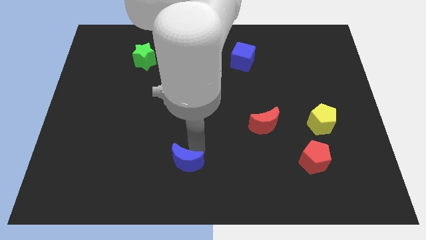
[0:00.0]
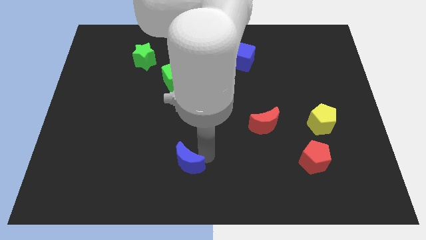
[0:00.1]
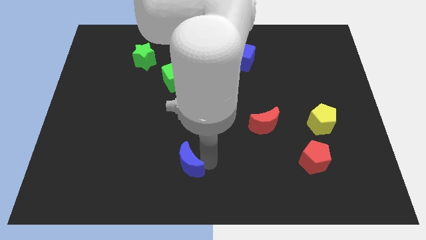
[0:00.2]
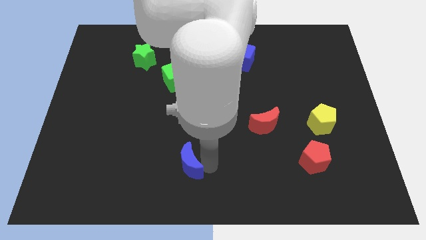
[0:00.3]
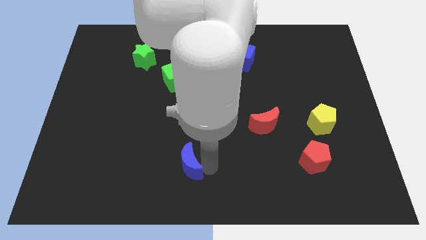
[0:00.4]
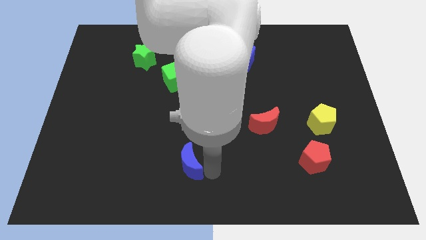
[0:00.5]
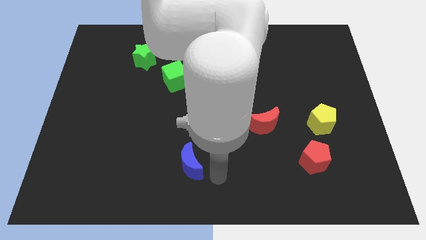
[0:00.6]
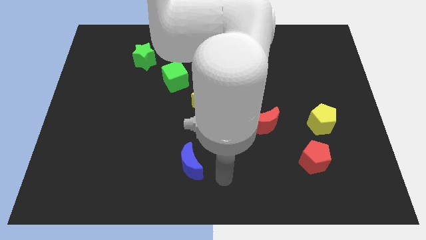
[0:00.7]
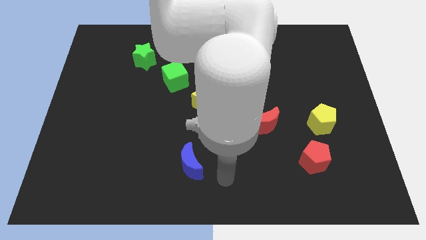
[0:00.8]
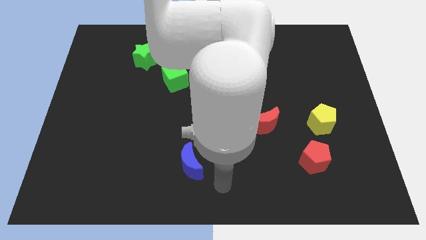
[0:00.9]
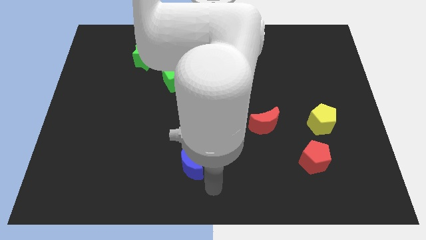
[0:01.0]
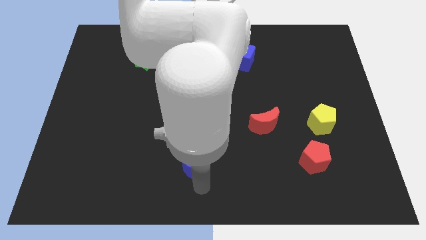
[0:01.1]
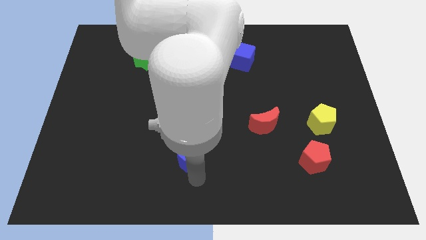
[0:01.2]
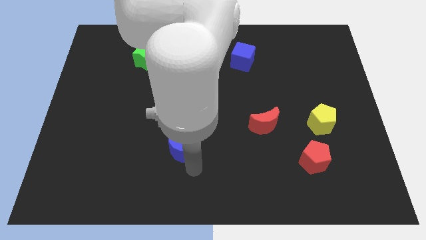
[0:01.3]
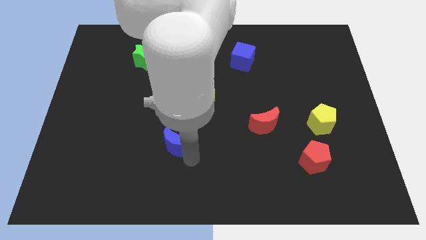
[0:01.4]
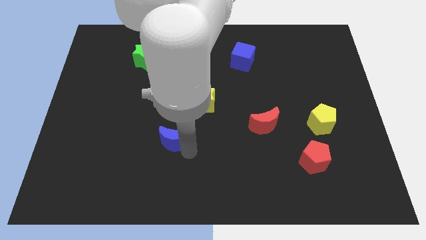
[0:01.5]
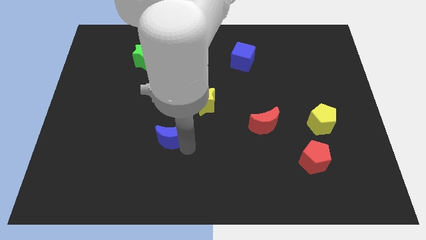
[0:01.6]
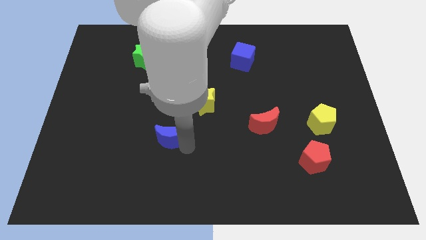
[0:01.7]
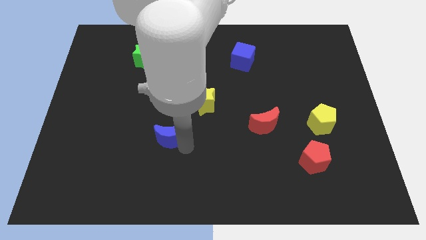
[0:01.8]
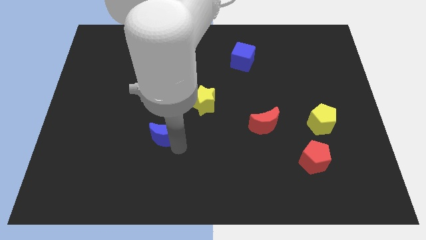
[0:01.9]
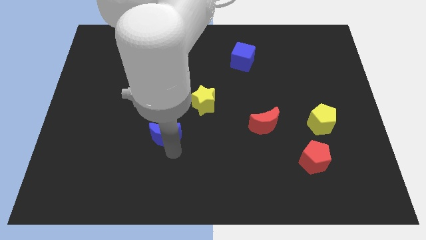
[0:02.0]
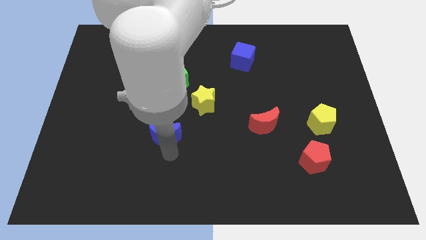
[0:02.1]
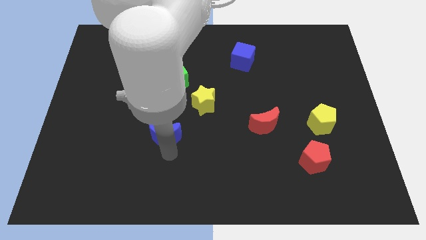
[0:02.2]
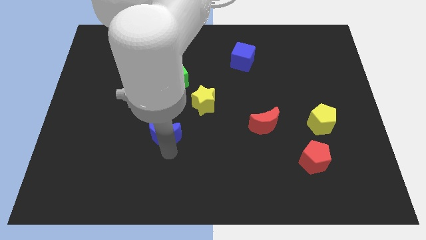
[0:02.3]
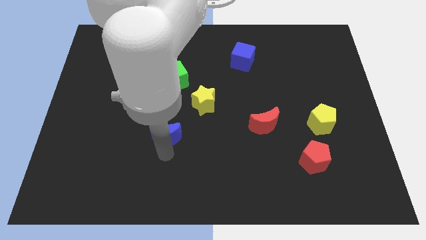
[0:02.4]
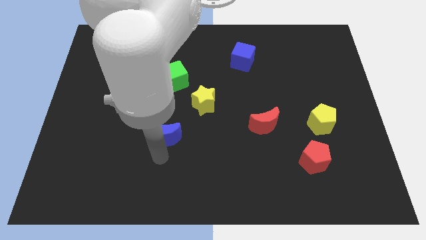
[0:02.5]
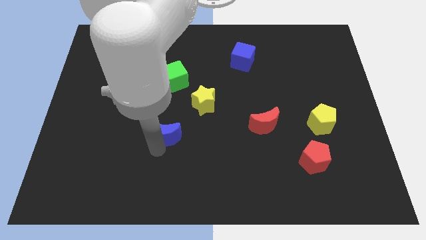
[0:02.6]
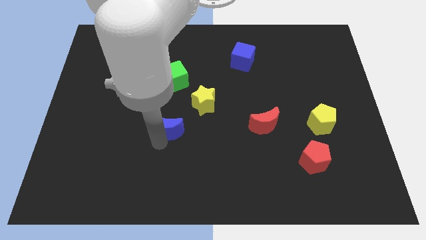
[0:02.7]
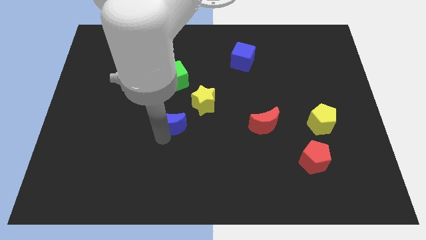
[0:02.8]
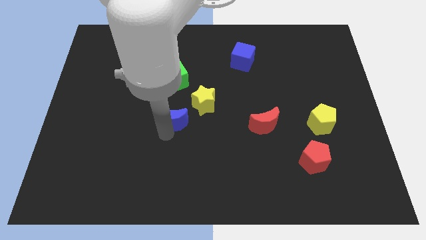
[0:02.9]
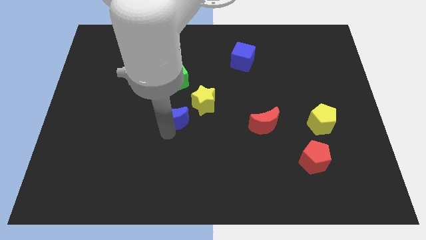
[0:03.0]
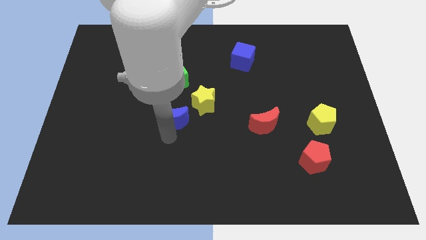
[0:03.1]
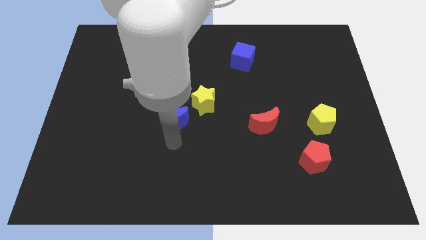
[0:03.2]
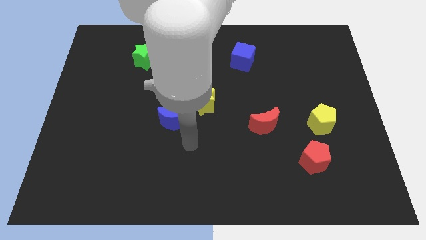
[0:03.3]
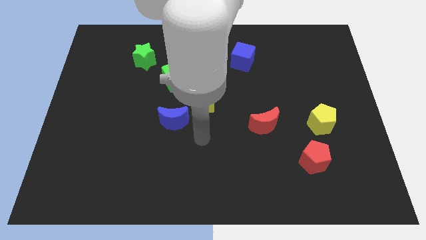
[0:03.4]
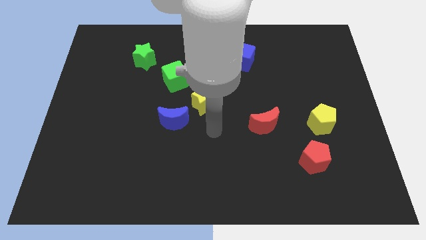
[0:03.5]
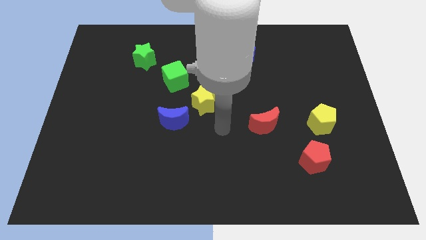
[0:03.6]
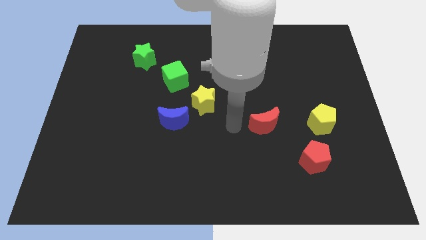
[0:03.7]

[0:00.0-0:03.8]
move the blue crescent to the left of the yellow star

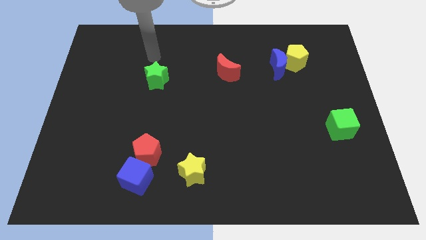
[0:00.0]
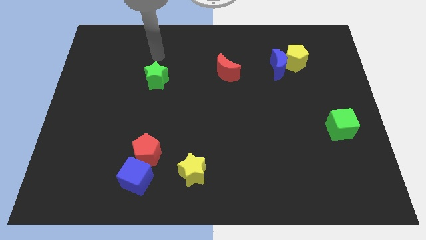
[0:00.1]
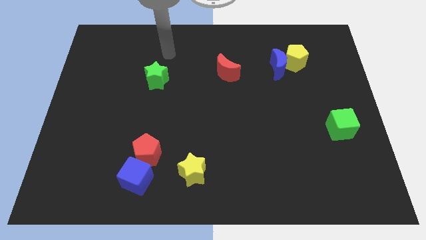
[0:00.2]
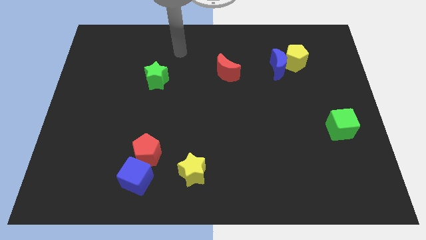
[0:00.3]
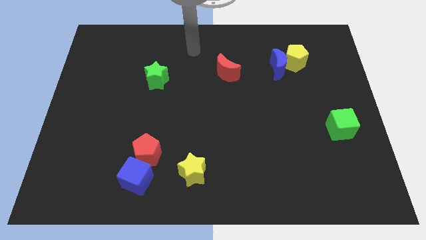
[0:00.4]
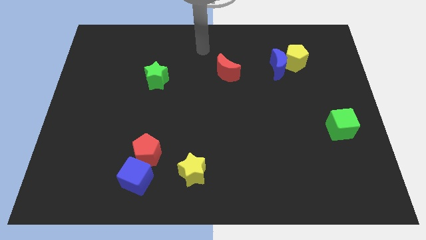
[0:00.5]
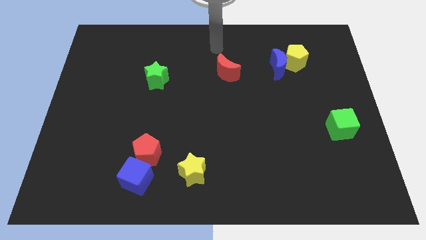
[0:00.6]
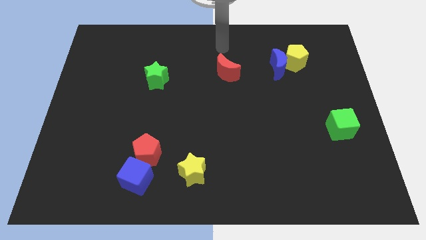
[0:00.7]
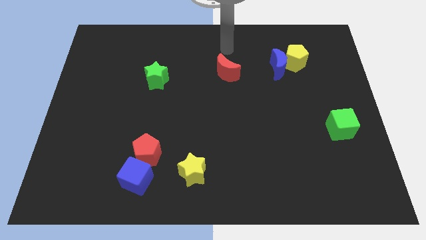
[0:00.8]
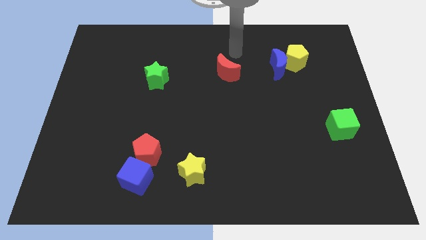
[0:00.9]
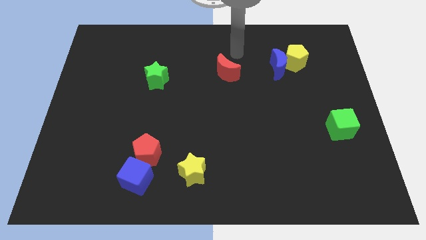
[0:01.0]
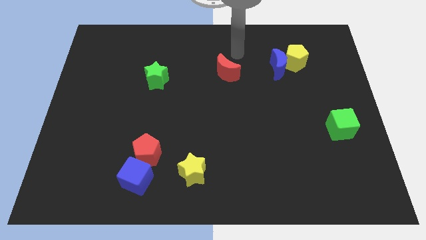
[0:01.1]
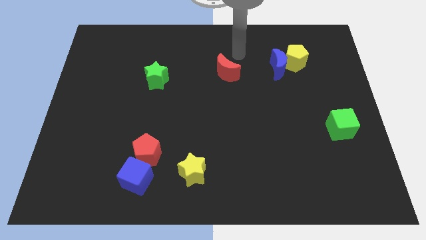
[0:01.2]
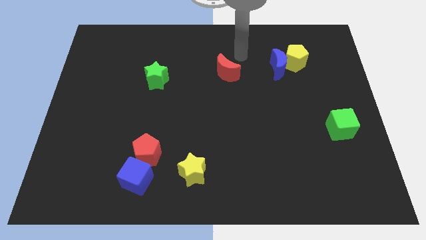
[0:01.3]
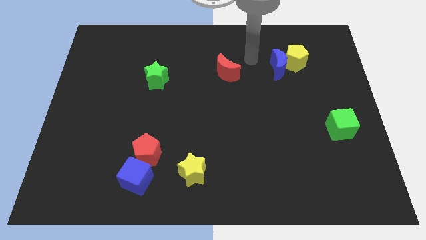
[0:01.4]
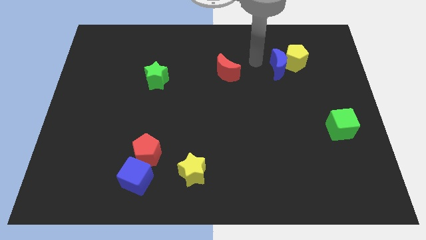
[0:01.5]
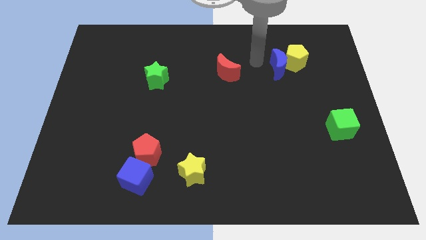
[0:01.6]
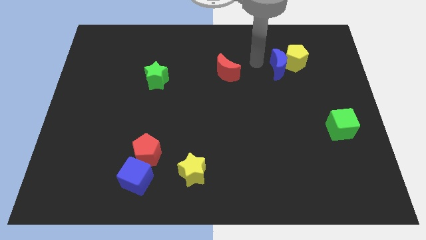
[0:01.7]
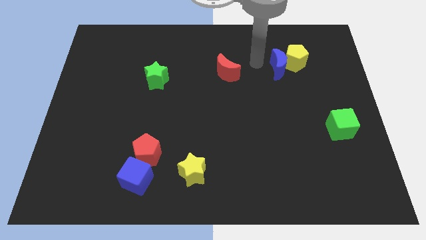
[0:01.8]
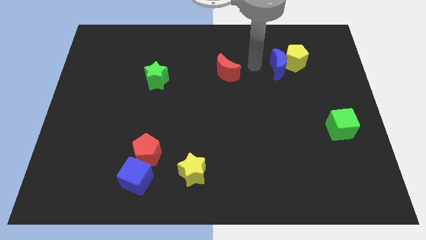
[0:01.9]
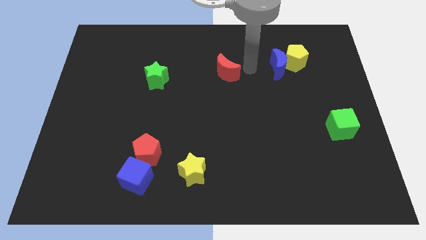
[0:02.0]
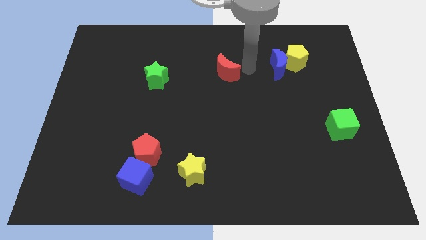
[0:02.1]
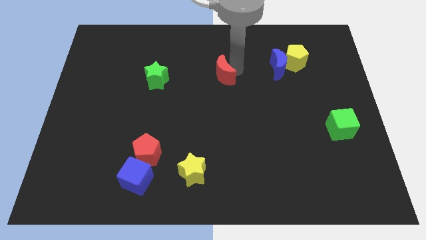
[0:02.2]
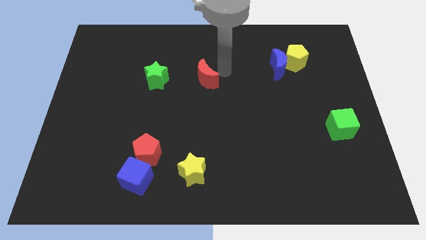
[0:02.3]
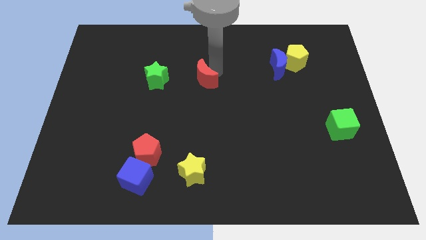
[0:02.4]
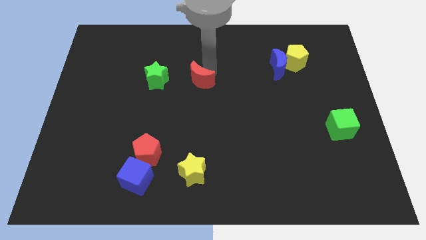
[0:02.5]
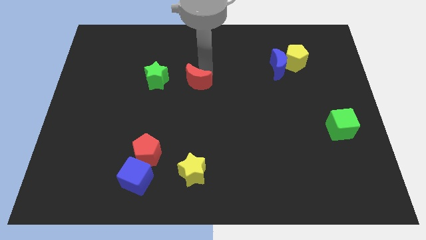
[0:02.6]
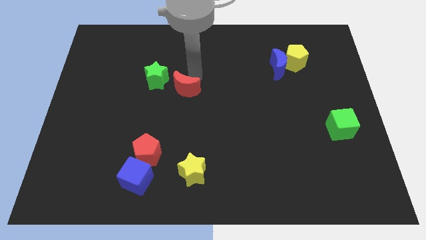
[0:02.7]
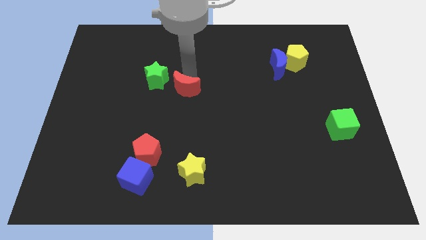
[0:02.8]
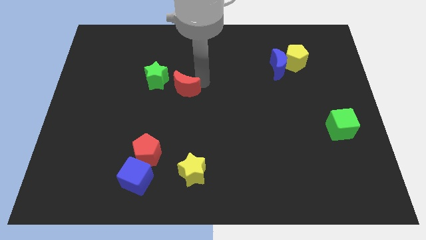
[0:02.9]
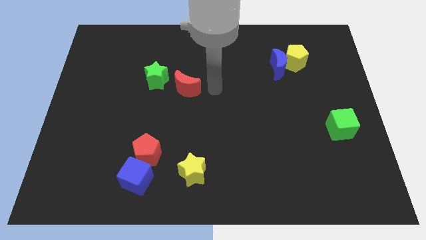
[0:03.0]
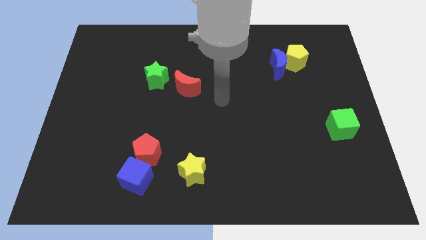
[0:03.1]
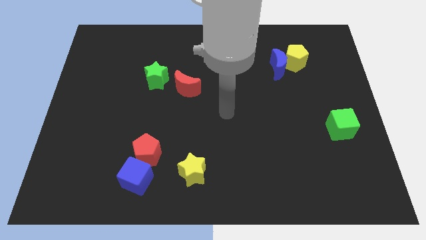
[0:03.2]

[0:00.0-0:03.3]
move the red crescent diagonally right to the green star

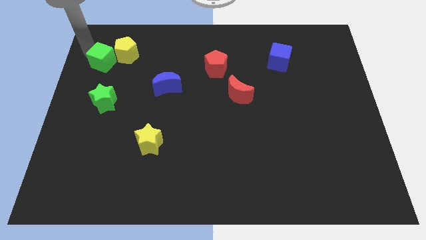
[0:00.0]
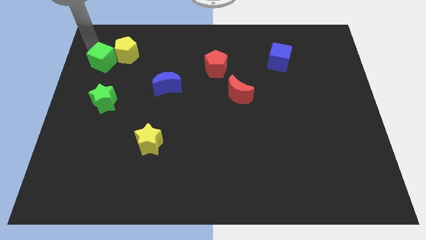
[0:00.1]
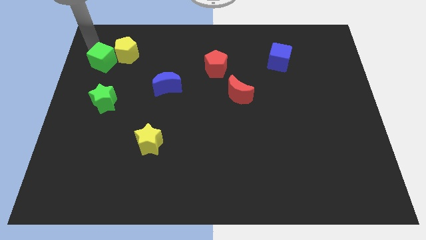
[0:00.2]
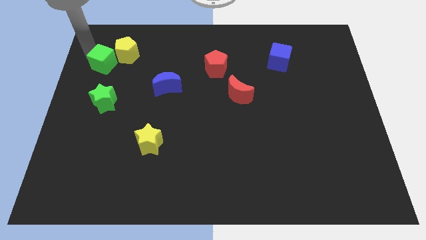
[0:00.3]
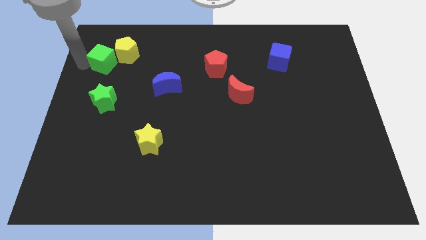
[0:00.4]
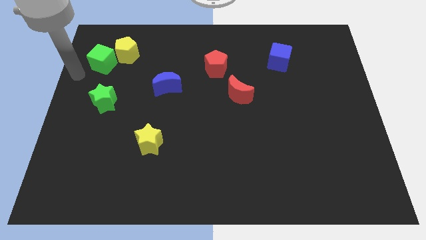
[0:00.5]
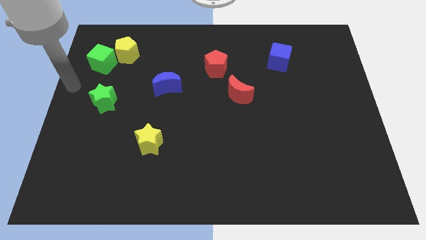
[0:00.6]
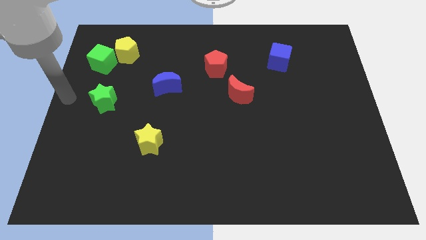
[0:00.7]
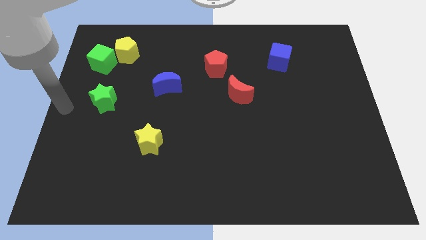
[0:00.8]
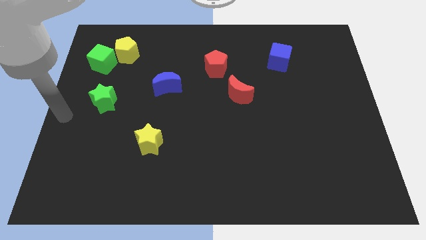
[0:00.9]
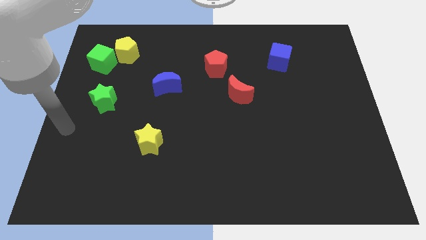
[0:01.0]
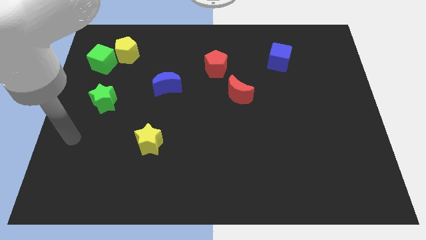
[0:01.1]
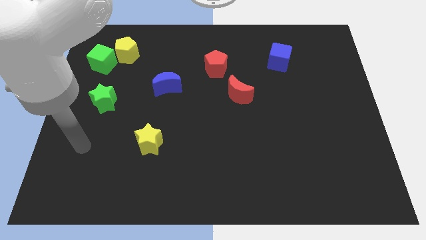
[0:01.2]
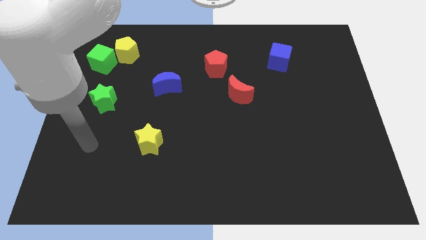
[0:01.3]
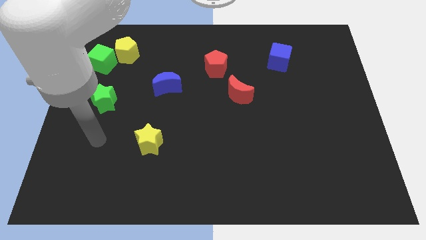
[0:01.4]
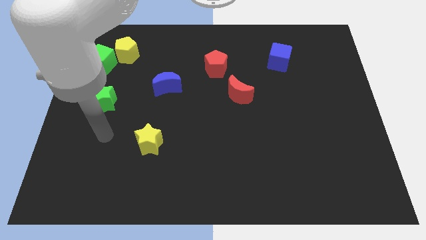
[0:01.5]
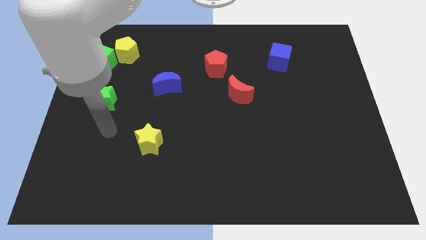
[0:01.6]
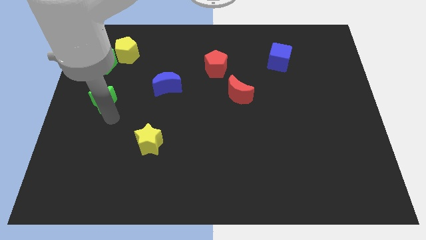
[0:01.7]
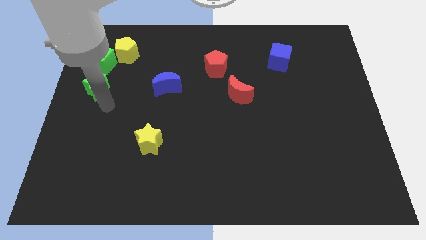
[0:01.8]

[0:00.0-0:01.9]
move the arm to the bottom of the green star
